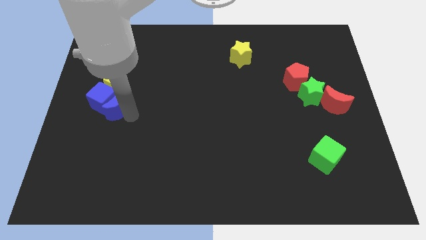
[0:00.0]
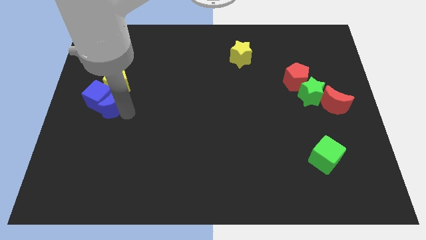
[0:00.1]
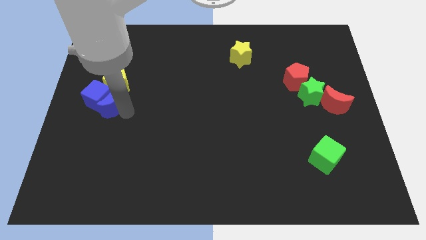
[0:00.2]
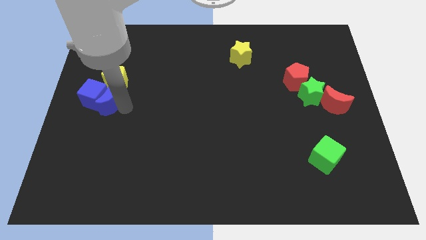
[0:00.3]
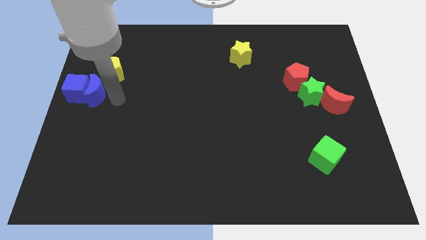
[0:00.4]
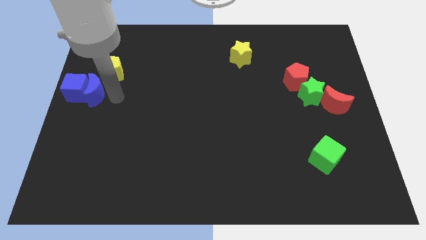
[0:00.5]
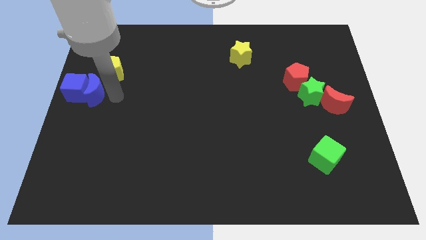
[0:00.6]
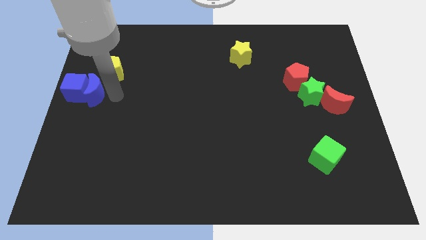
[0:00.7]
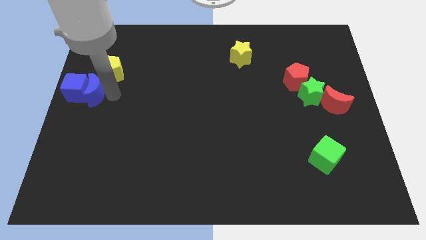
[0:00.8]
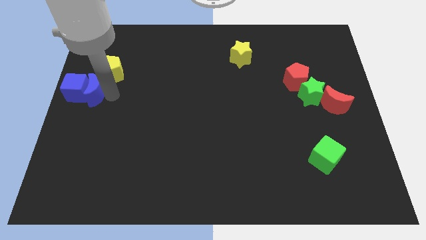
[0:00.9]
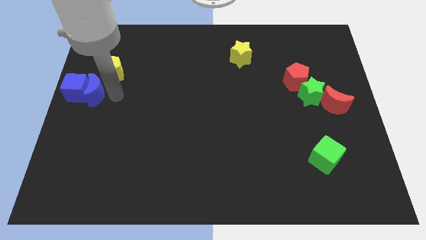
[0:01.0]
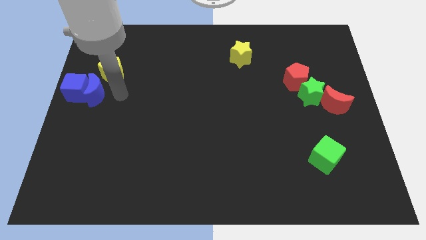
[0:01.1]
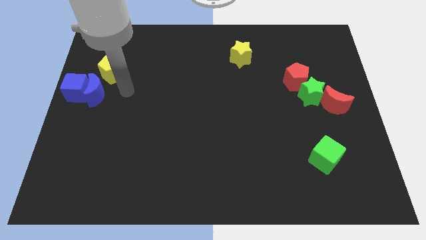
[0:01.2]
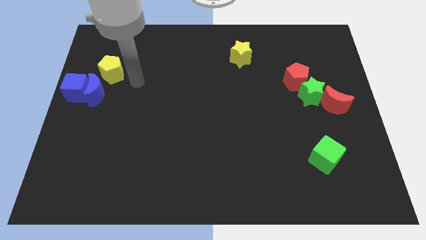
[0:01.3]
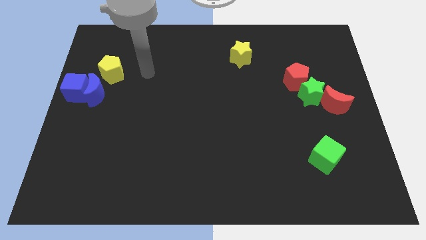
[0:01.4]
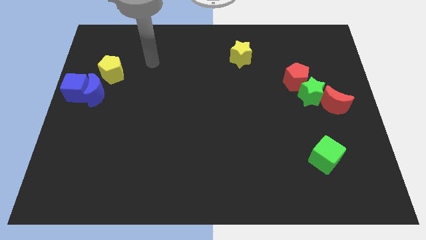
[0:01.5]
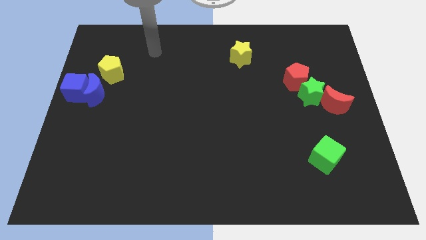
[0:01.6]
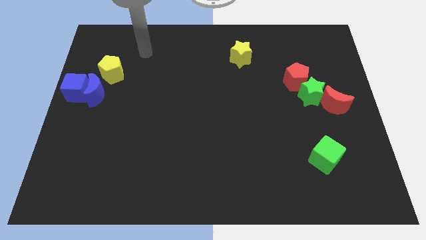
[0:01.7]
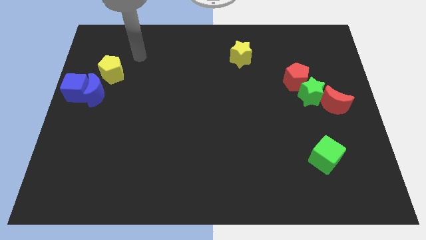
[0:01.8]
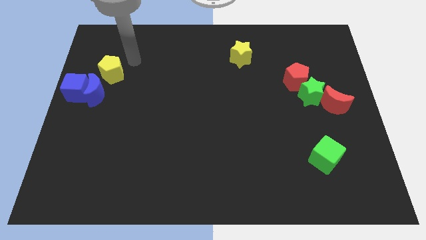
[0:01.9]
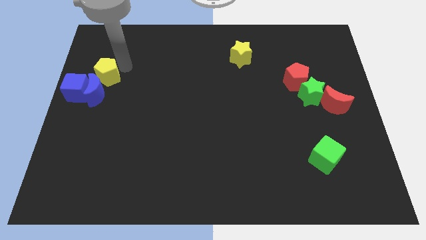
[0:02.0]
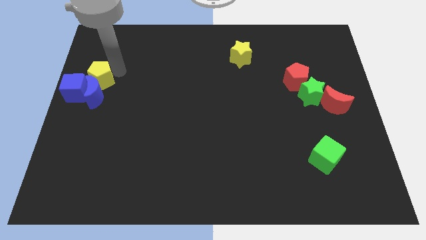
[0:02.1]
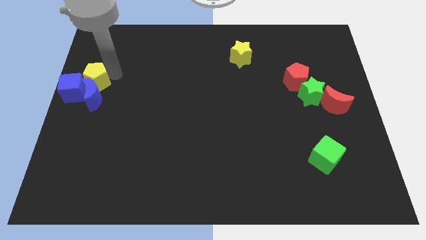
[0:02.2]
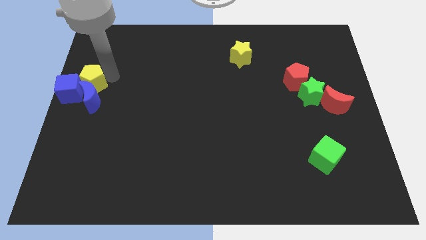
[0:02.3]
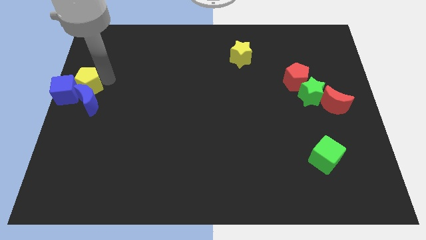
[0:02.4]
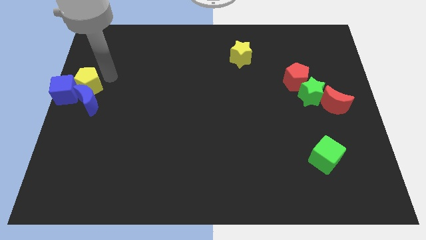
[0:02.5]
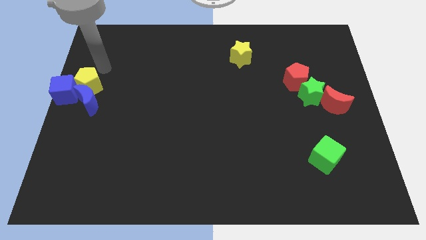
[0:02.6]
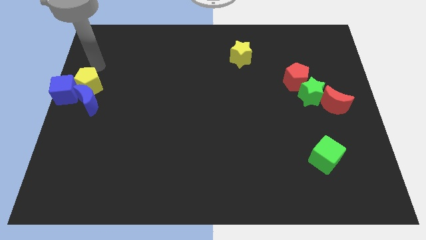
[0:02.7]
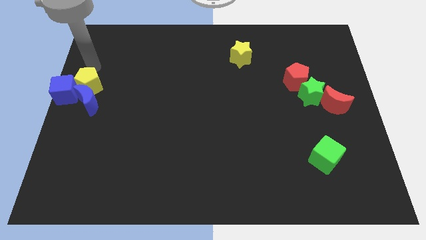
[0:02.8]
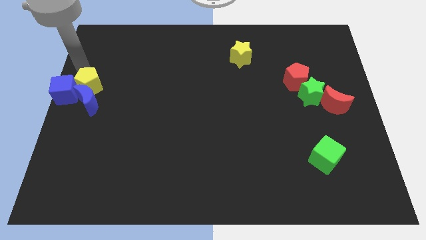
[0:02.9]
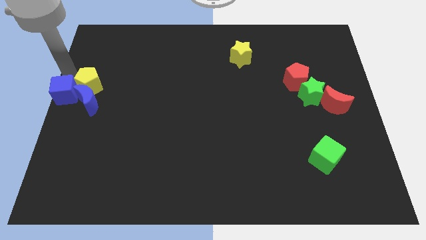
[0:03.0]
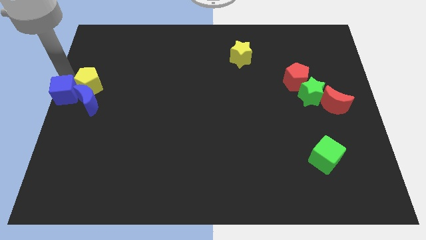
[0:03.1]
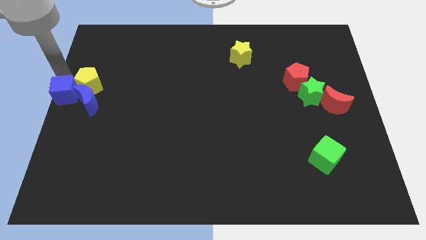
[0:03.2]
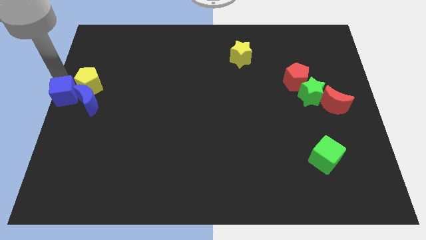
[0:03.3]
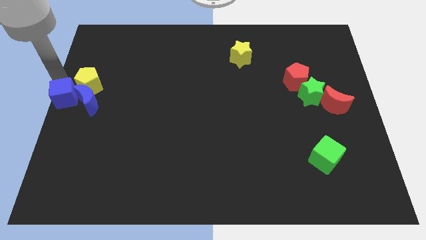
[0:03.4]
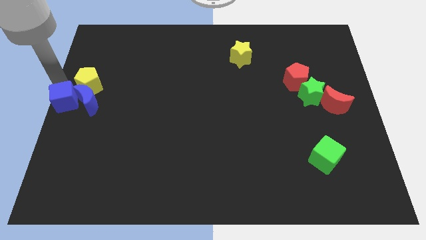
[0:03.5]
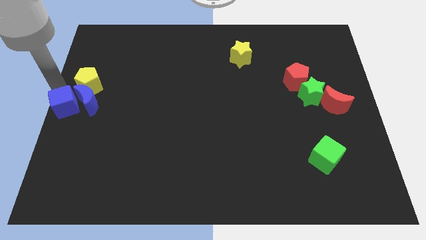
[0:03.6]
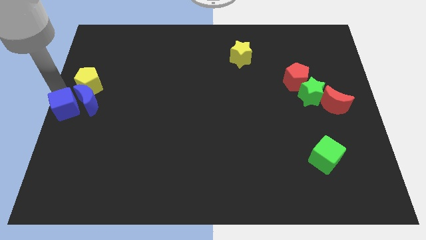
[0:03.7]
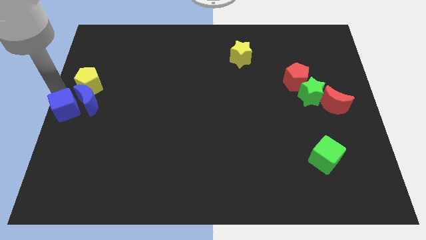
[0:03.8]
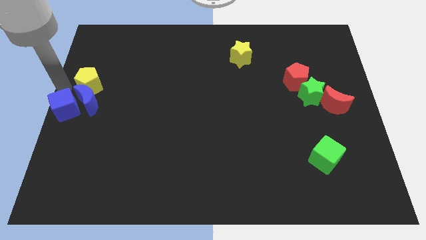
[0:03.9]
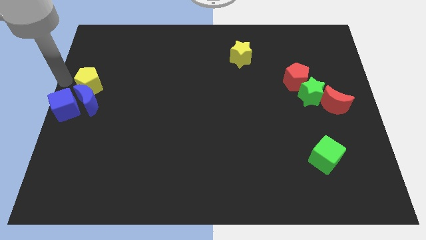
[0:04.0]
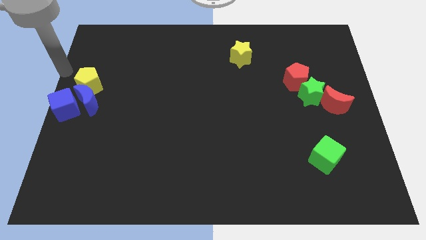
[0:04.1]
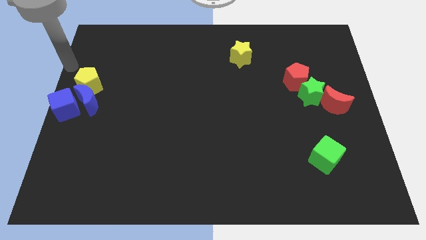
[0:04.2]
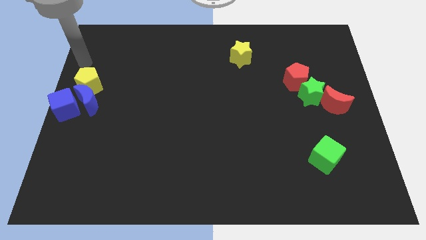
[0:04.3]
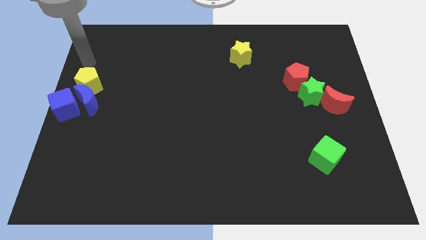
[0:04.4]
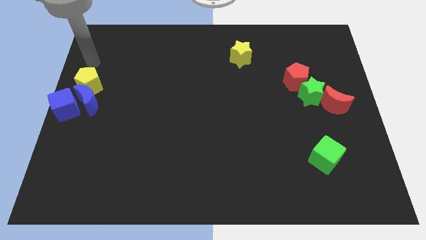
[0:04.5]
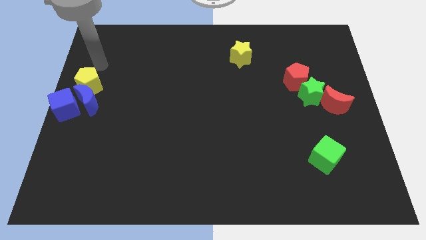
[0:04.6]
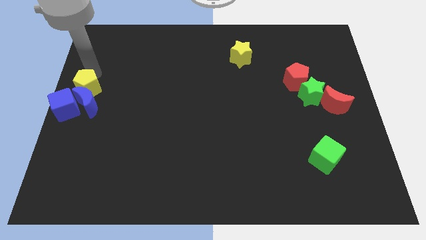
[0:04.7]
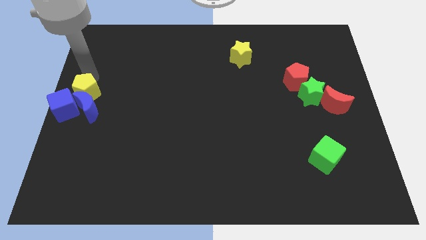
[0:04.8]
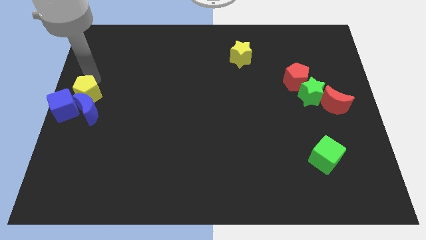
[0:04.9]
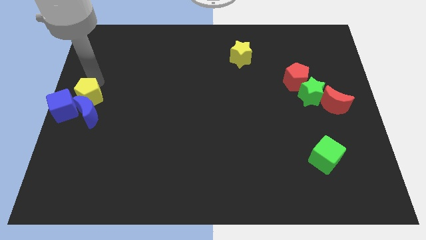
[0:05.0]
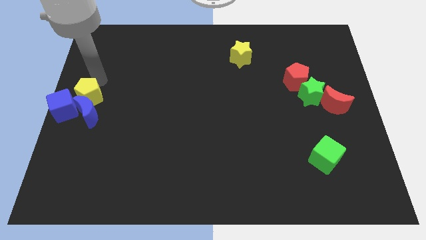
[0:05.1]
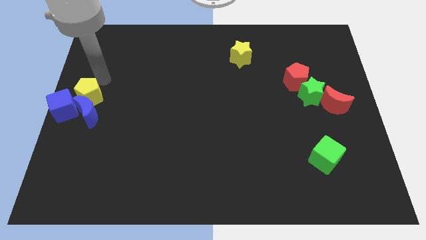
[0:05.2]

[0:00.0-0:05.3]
place both the blue blocks and yellow pentagon at the left center of the board

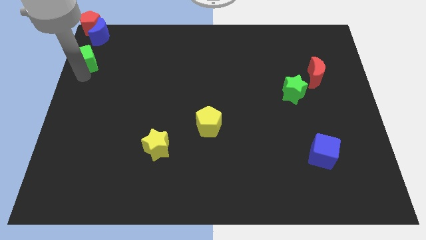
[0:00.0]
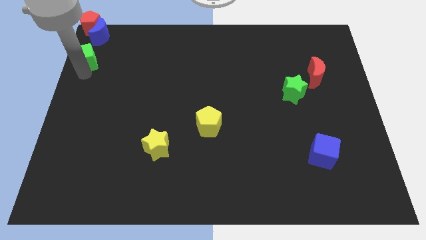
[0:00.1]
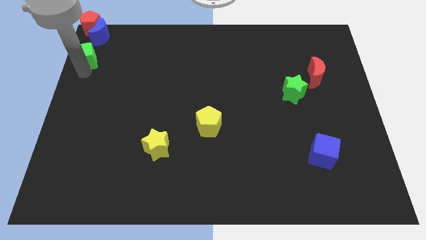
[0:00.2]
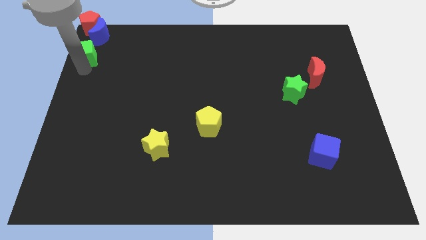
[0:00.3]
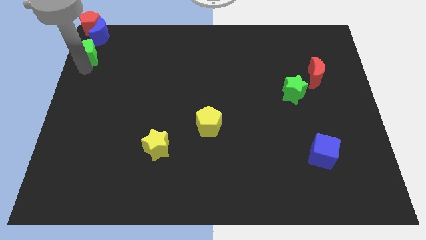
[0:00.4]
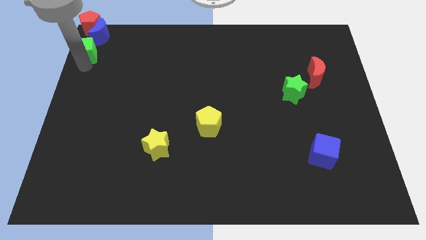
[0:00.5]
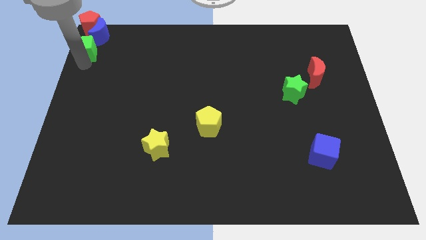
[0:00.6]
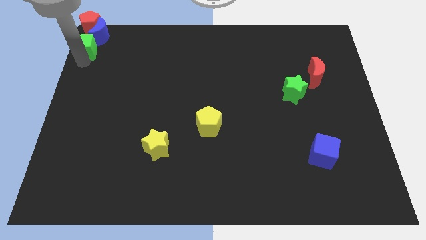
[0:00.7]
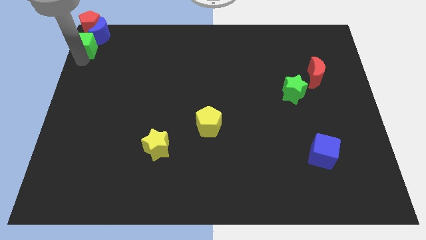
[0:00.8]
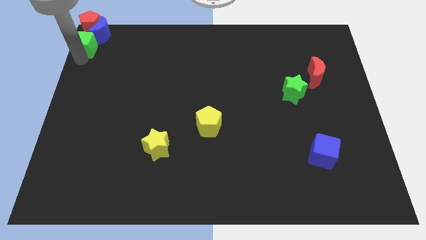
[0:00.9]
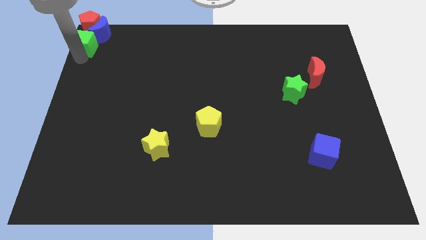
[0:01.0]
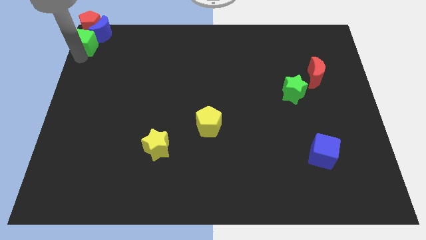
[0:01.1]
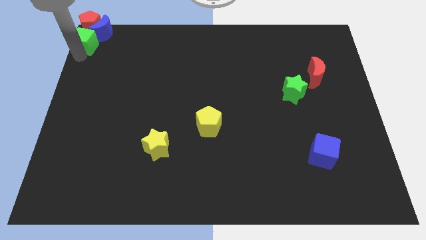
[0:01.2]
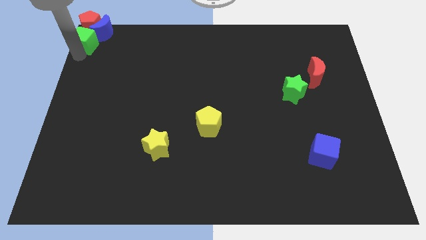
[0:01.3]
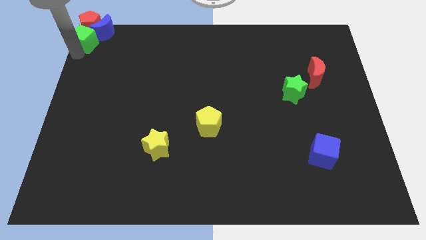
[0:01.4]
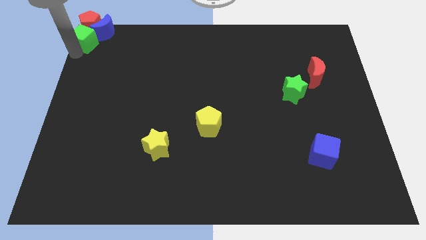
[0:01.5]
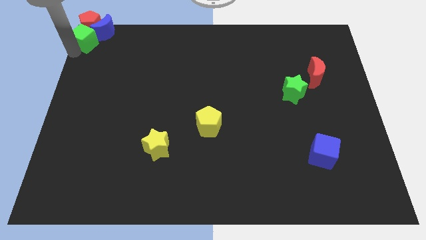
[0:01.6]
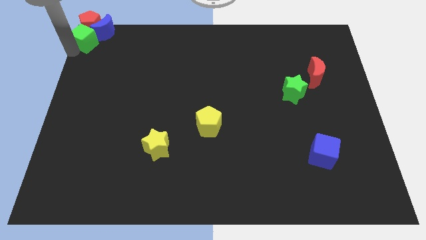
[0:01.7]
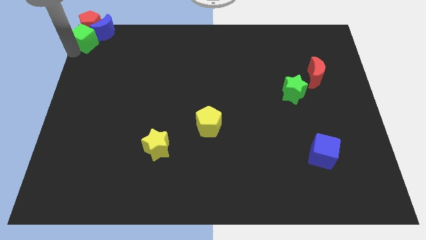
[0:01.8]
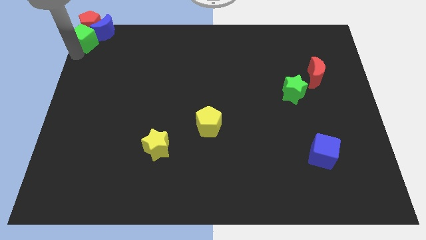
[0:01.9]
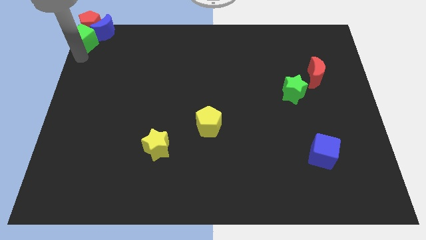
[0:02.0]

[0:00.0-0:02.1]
place the green cube at the top left of the board

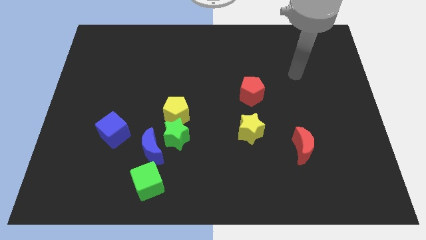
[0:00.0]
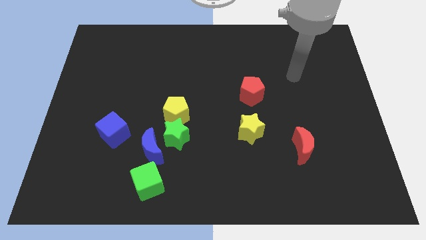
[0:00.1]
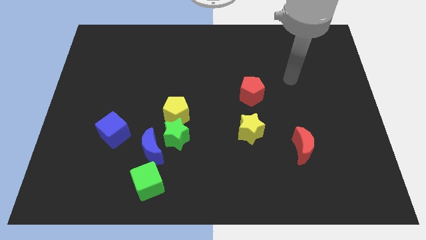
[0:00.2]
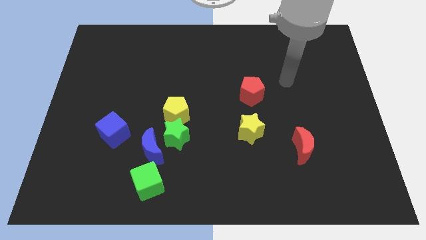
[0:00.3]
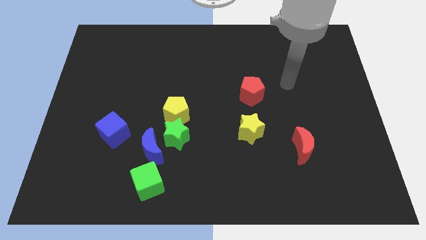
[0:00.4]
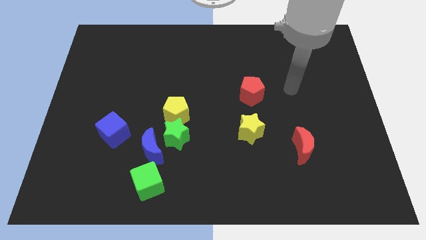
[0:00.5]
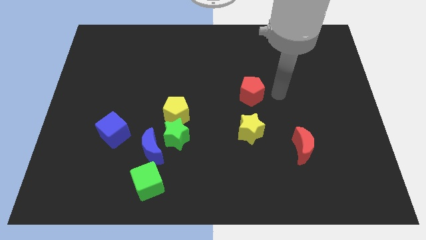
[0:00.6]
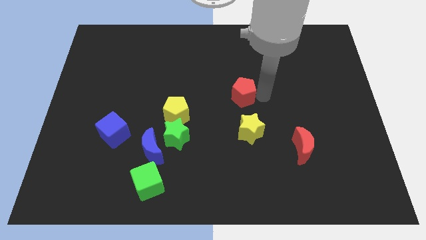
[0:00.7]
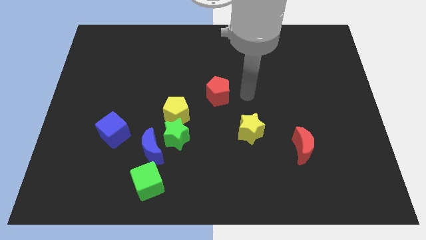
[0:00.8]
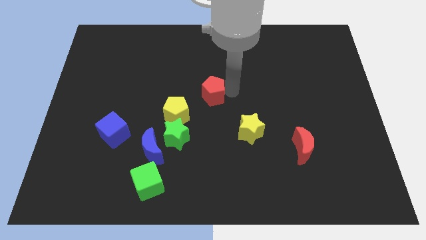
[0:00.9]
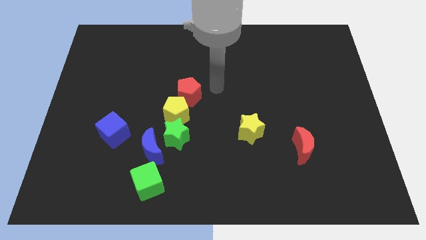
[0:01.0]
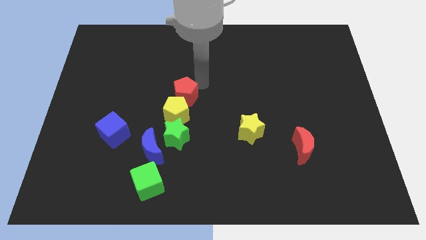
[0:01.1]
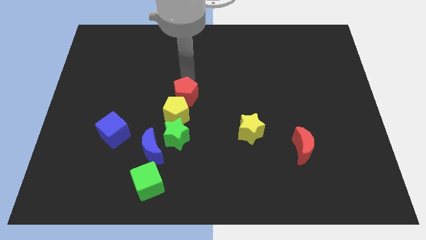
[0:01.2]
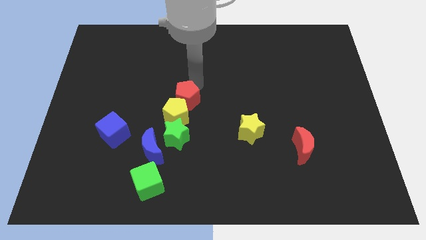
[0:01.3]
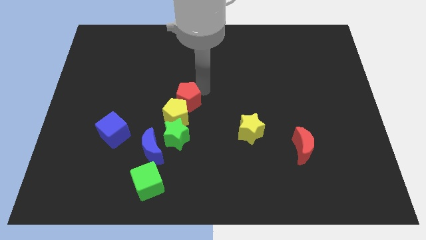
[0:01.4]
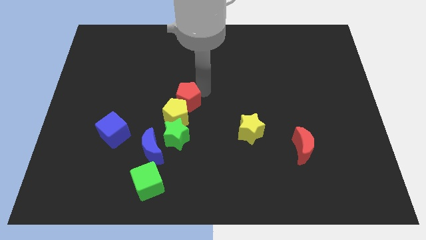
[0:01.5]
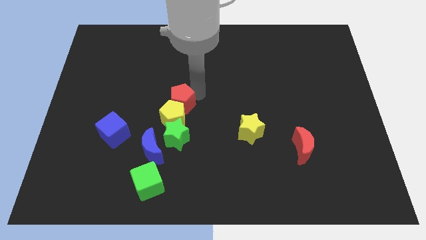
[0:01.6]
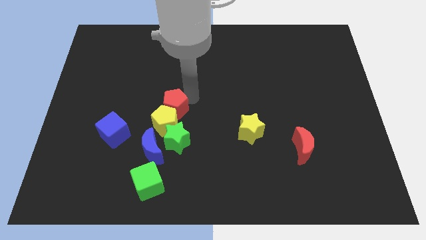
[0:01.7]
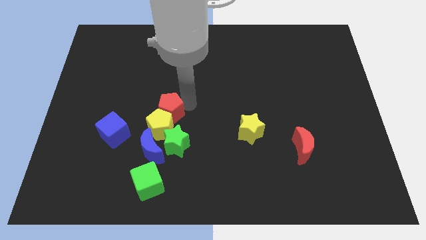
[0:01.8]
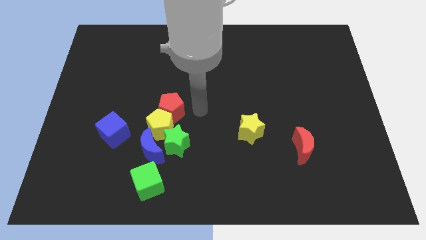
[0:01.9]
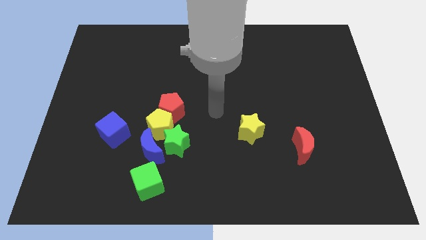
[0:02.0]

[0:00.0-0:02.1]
push the red pentagon into the yellow pentagon
